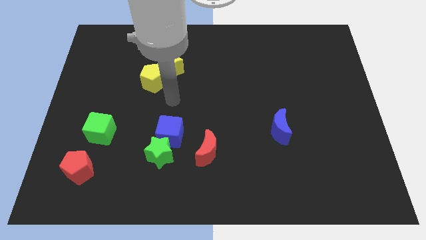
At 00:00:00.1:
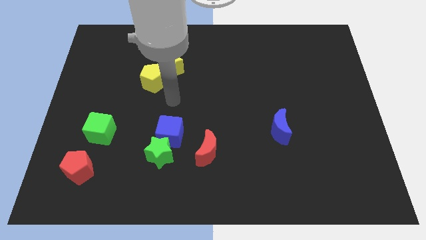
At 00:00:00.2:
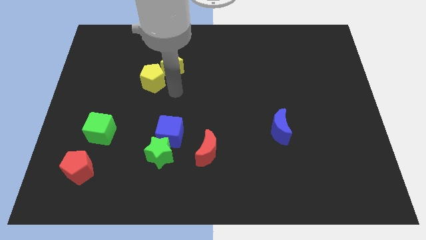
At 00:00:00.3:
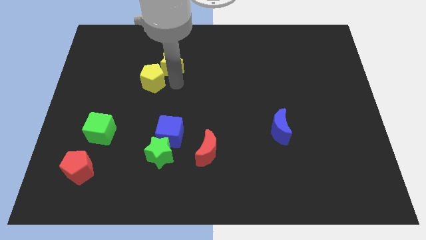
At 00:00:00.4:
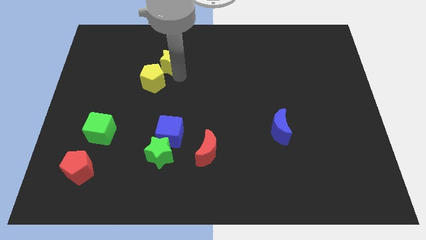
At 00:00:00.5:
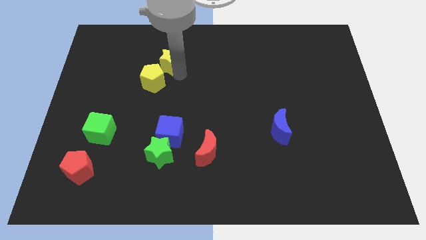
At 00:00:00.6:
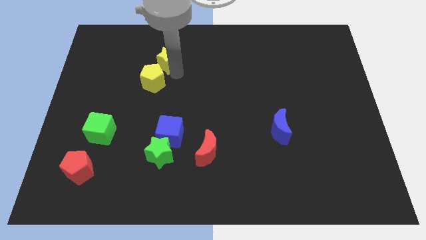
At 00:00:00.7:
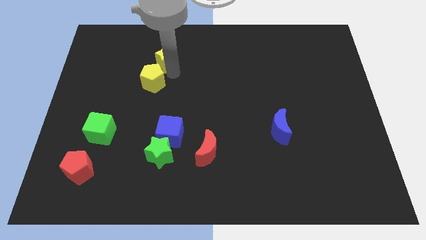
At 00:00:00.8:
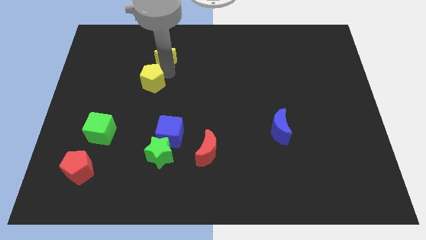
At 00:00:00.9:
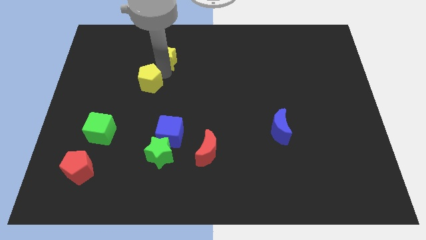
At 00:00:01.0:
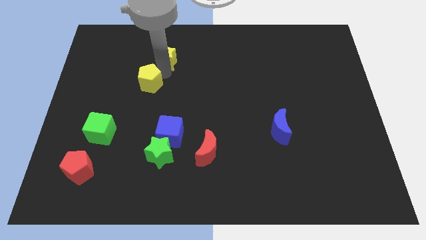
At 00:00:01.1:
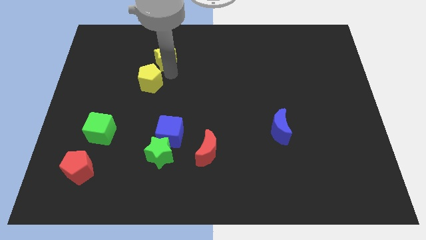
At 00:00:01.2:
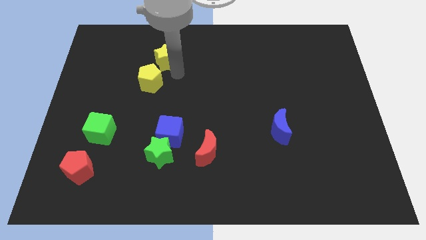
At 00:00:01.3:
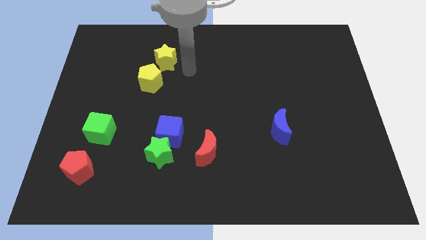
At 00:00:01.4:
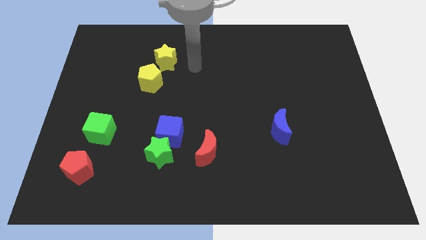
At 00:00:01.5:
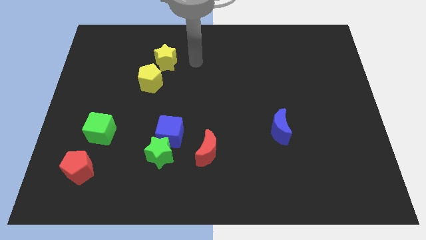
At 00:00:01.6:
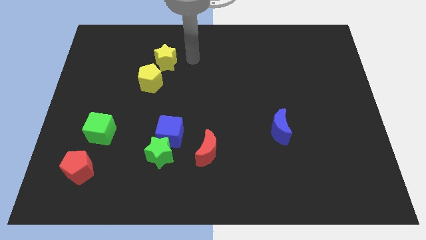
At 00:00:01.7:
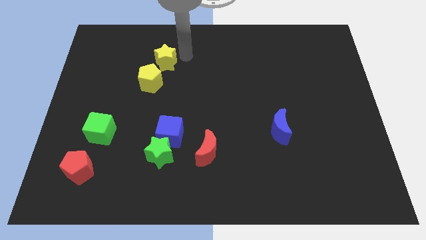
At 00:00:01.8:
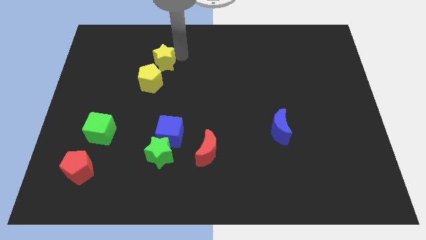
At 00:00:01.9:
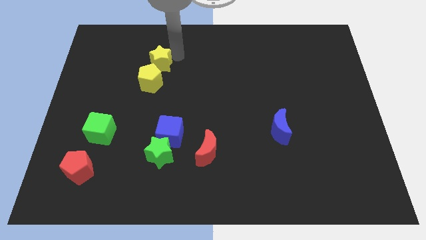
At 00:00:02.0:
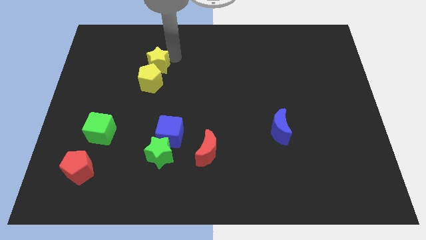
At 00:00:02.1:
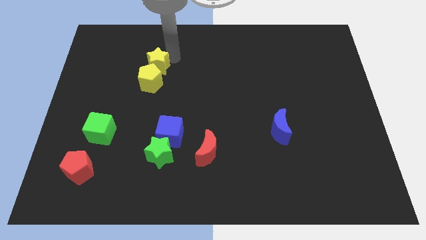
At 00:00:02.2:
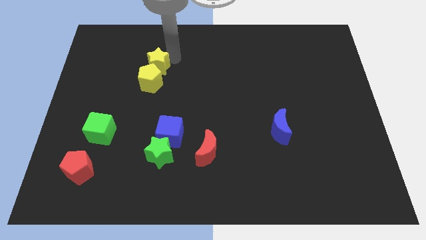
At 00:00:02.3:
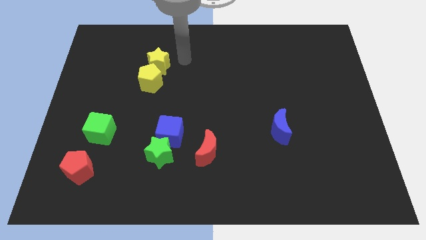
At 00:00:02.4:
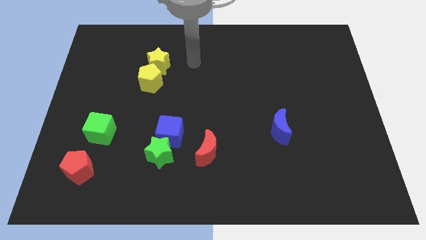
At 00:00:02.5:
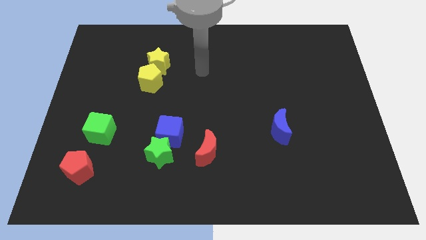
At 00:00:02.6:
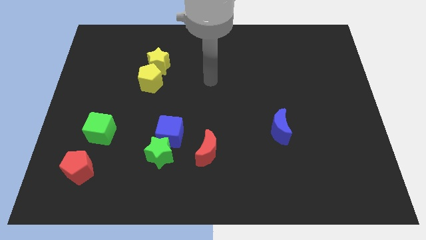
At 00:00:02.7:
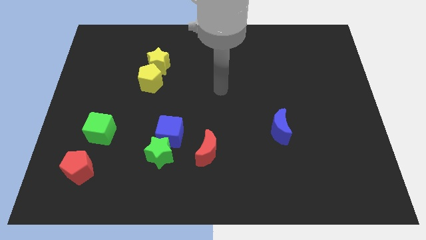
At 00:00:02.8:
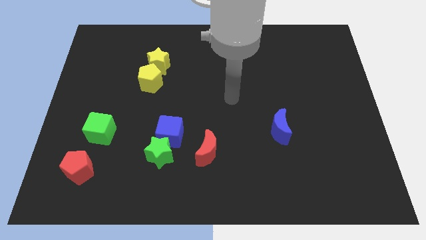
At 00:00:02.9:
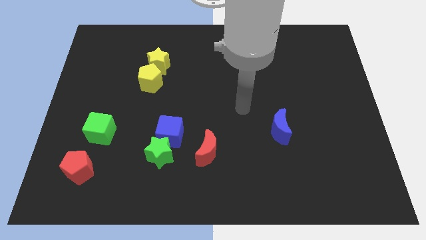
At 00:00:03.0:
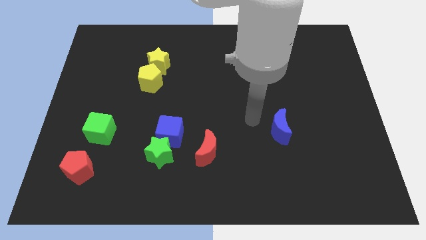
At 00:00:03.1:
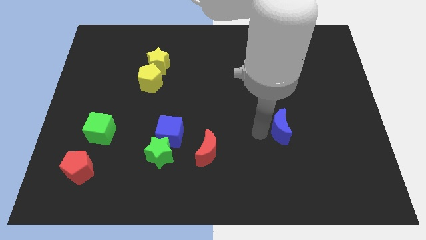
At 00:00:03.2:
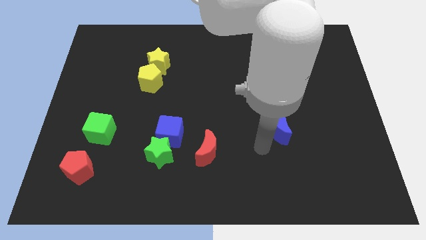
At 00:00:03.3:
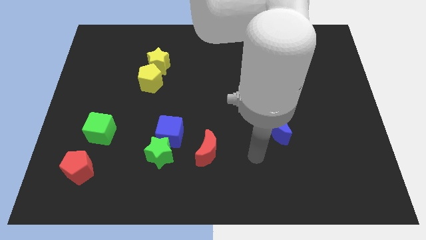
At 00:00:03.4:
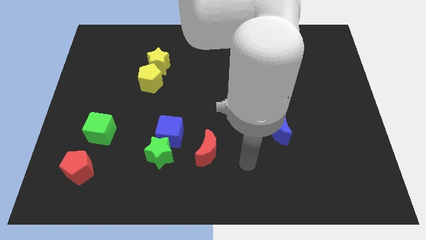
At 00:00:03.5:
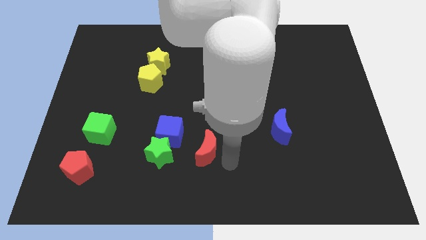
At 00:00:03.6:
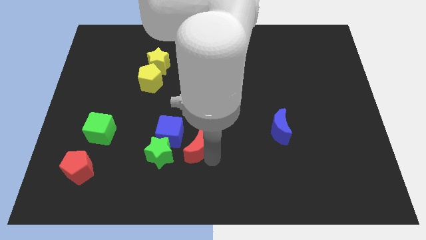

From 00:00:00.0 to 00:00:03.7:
push the yellow star to the top of the yellow pentagon

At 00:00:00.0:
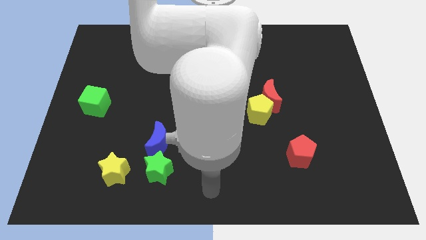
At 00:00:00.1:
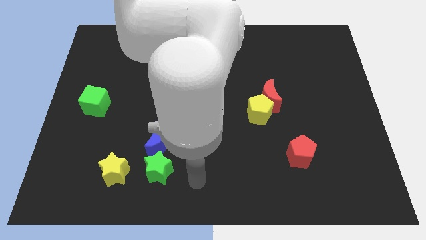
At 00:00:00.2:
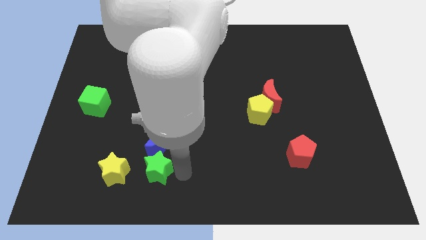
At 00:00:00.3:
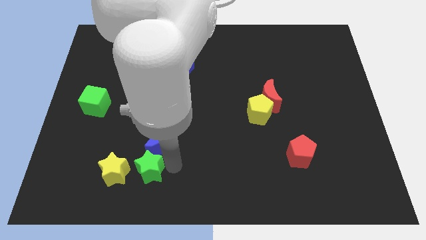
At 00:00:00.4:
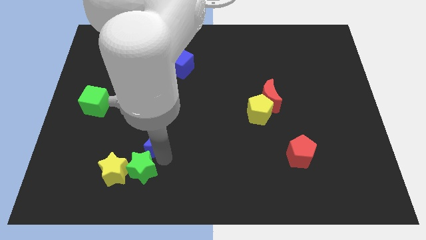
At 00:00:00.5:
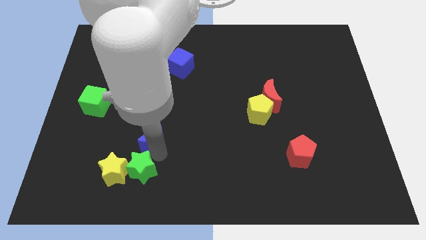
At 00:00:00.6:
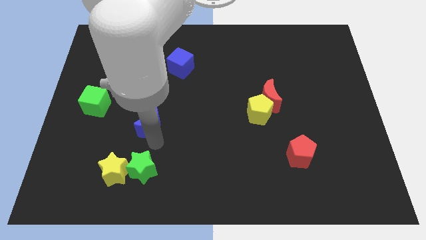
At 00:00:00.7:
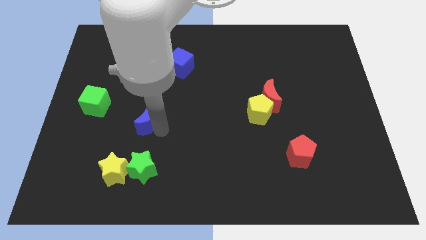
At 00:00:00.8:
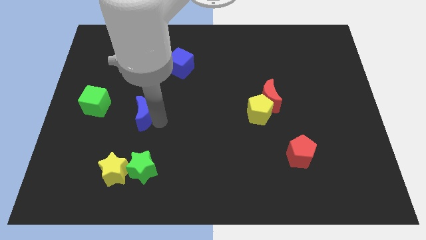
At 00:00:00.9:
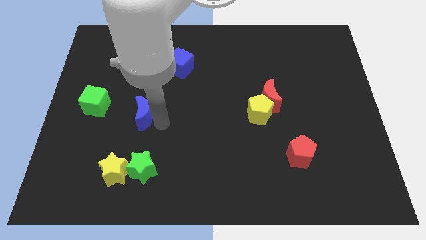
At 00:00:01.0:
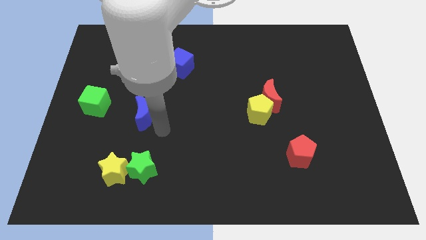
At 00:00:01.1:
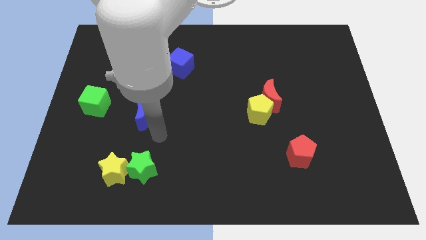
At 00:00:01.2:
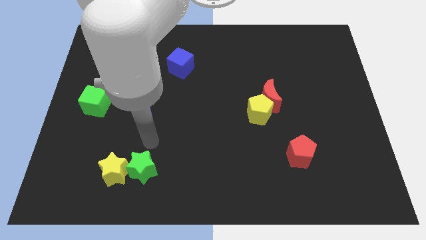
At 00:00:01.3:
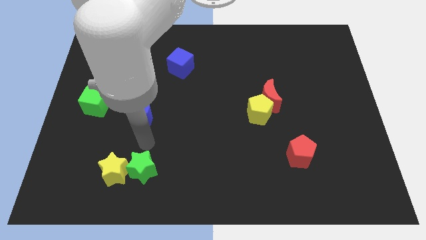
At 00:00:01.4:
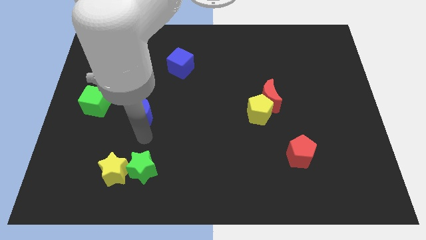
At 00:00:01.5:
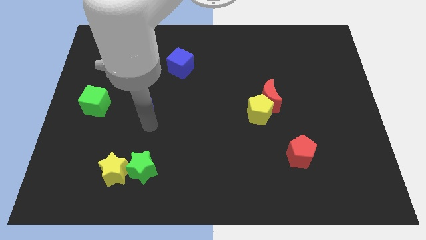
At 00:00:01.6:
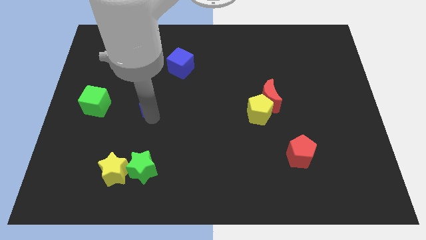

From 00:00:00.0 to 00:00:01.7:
place the blue moon right to the green cube

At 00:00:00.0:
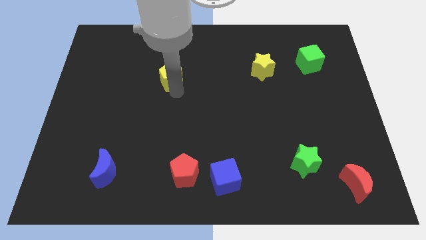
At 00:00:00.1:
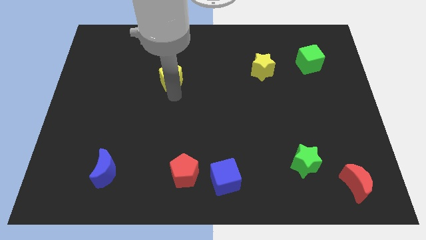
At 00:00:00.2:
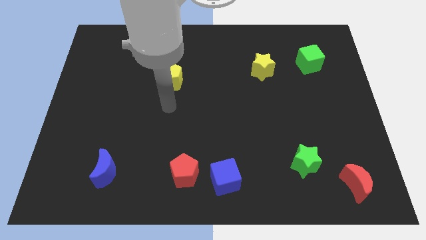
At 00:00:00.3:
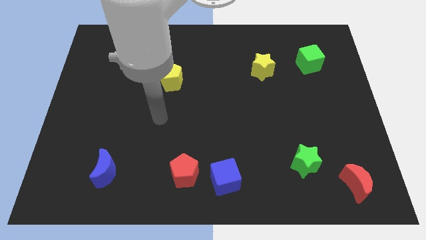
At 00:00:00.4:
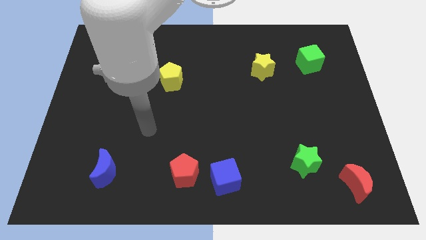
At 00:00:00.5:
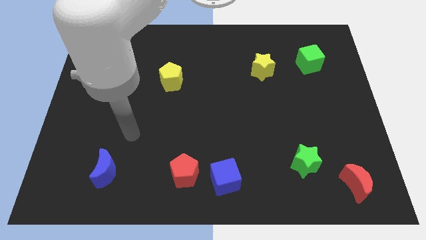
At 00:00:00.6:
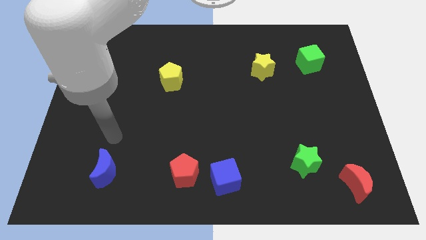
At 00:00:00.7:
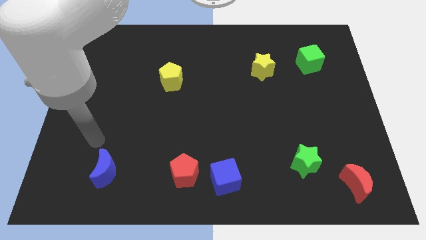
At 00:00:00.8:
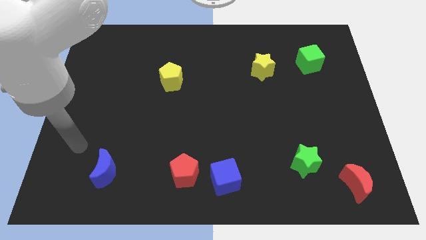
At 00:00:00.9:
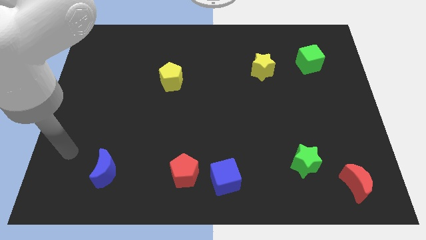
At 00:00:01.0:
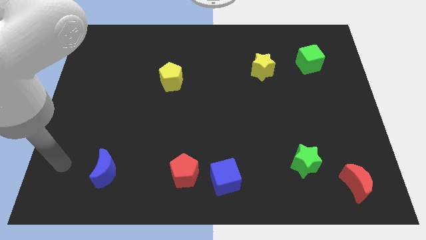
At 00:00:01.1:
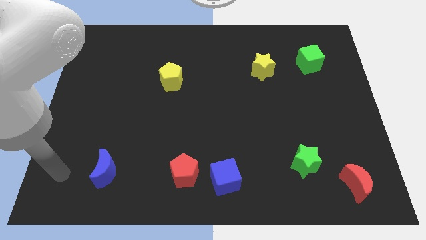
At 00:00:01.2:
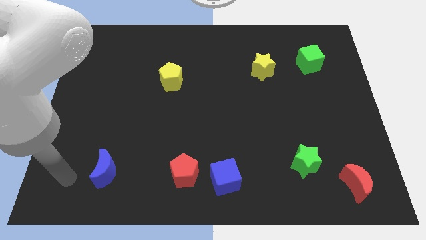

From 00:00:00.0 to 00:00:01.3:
move your arm away from the yellow pentagon

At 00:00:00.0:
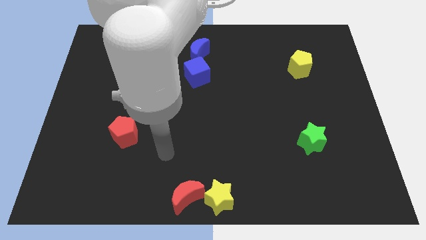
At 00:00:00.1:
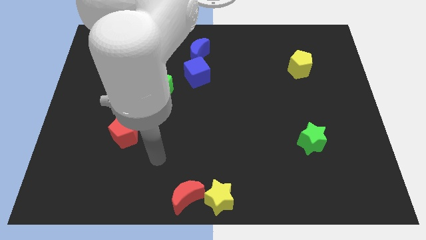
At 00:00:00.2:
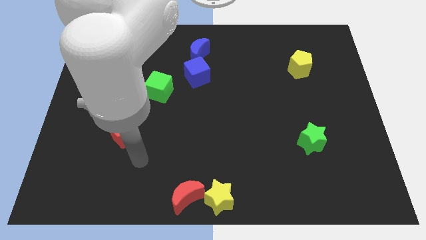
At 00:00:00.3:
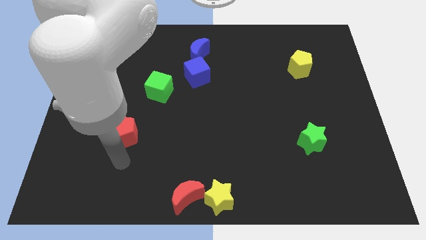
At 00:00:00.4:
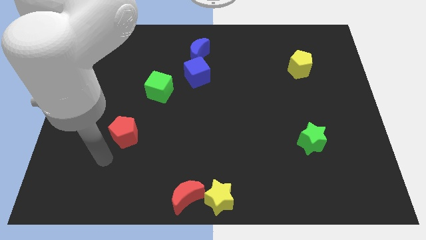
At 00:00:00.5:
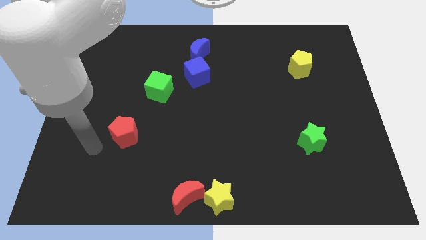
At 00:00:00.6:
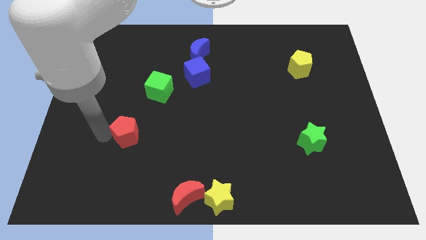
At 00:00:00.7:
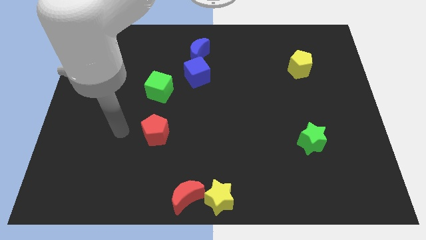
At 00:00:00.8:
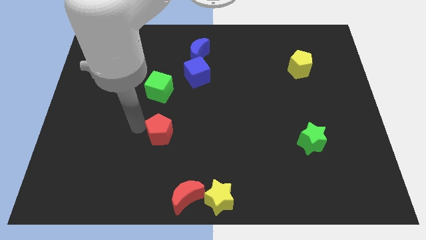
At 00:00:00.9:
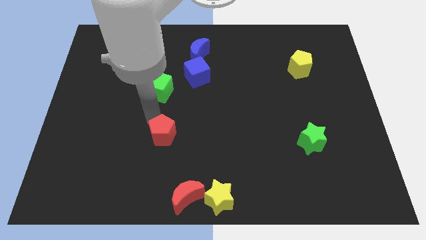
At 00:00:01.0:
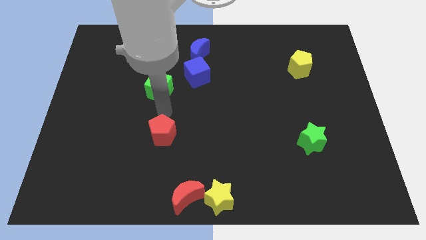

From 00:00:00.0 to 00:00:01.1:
put the red pentagon below the green cube

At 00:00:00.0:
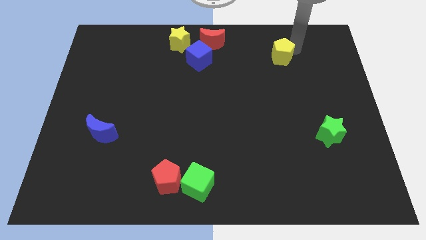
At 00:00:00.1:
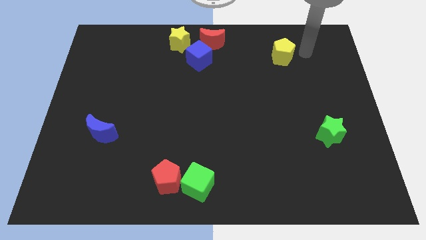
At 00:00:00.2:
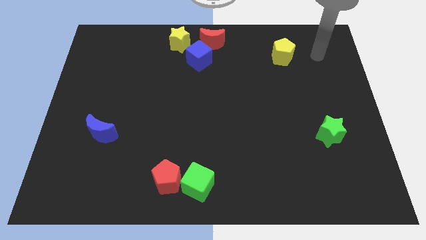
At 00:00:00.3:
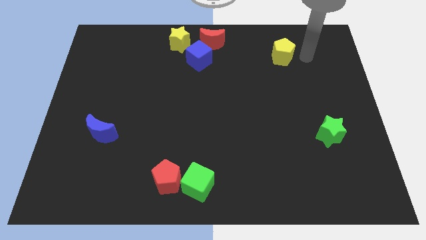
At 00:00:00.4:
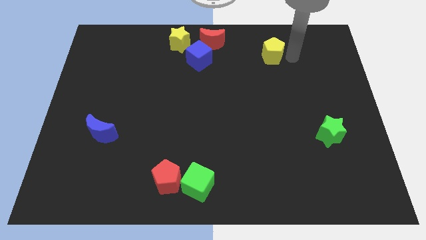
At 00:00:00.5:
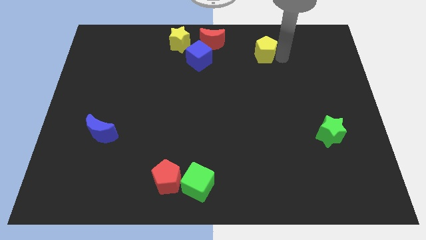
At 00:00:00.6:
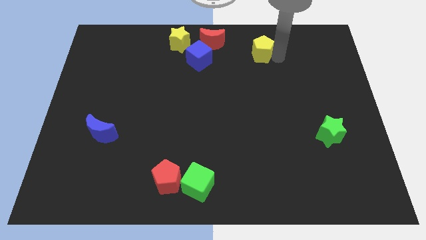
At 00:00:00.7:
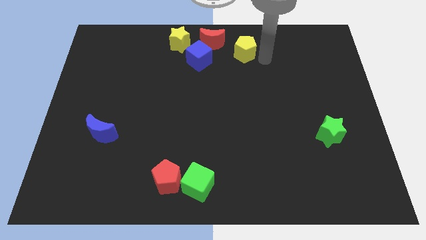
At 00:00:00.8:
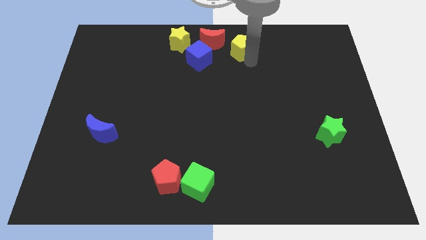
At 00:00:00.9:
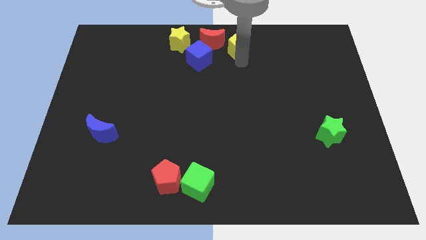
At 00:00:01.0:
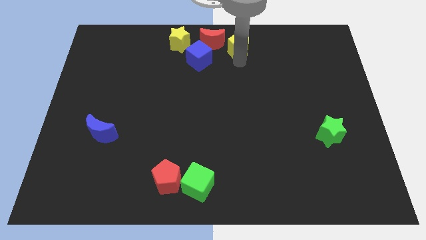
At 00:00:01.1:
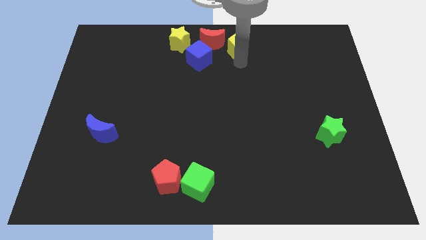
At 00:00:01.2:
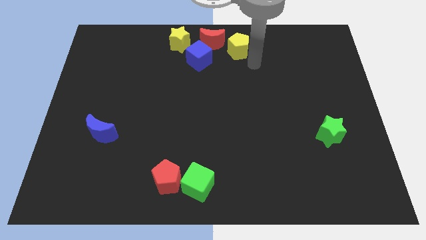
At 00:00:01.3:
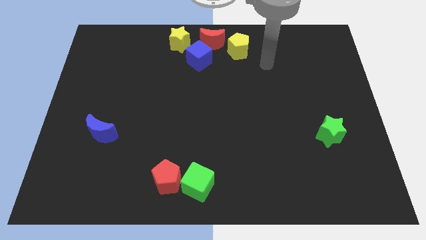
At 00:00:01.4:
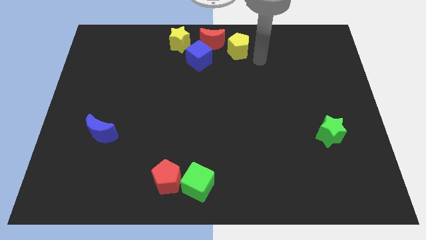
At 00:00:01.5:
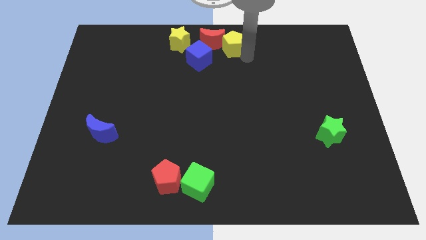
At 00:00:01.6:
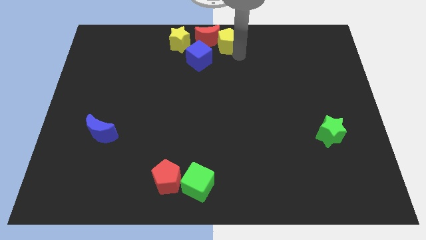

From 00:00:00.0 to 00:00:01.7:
push the yellow pentagon into red crescent
